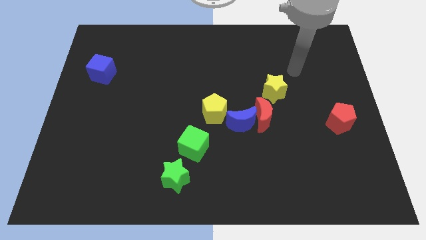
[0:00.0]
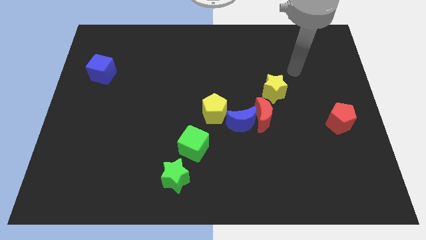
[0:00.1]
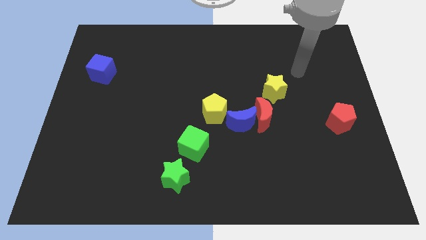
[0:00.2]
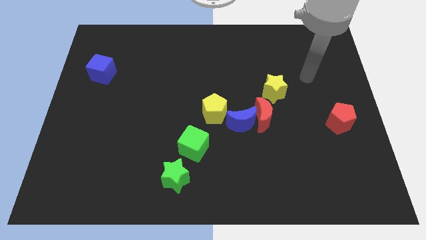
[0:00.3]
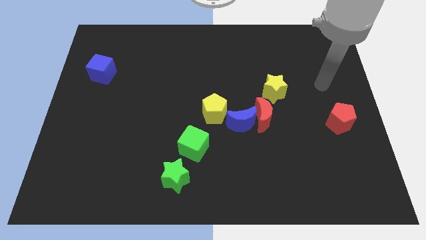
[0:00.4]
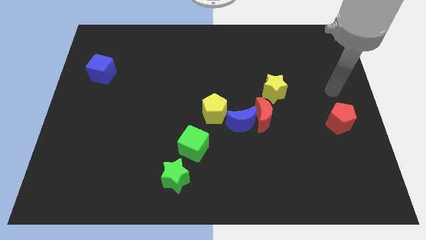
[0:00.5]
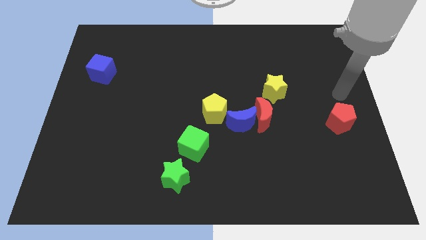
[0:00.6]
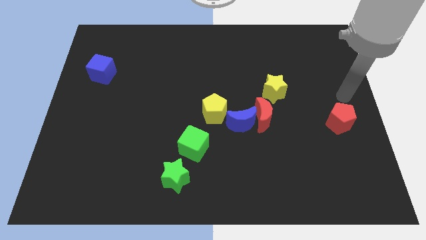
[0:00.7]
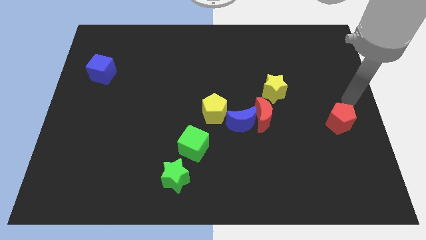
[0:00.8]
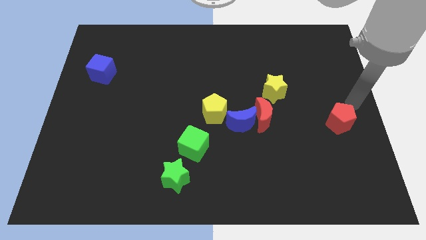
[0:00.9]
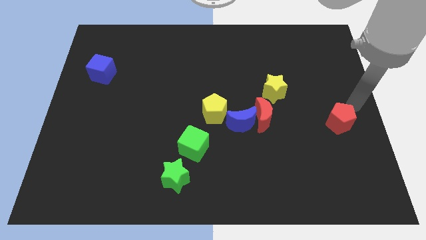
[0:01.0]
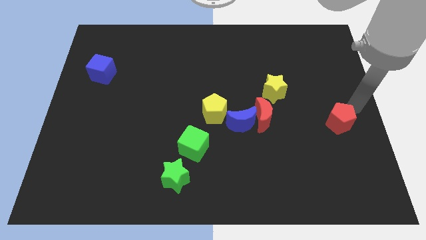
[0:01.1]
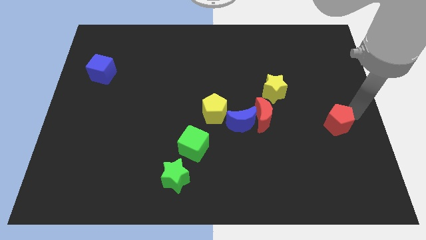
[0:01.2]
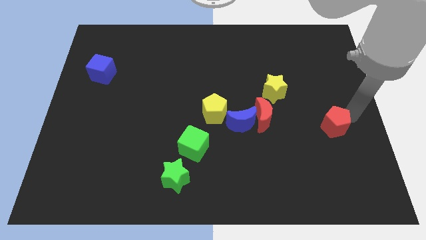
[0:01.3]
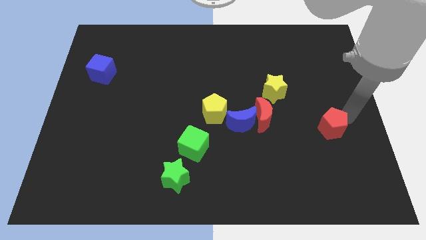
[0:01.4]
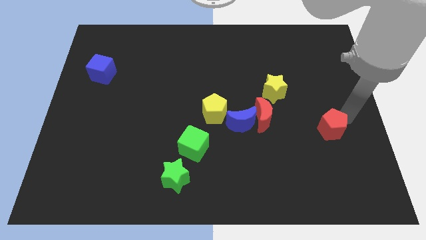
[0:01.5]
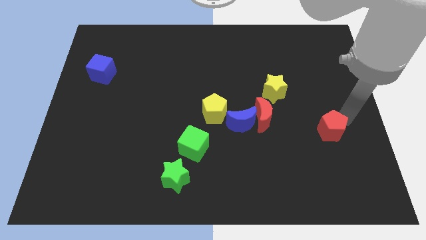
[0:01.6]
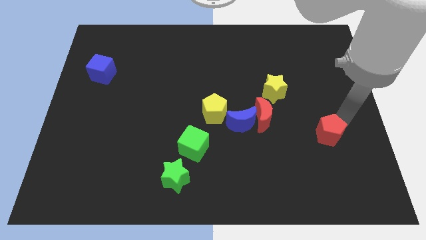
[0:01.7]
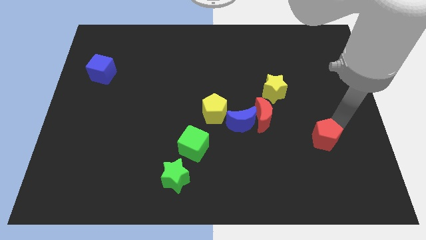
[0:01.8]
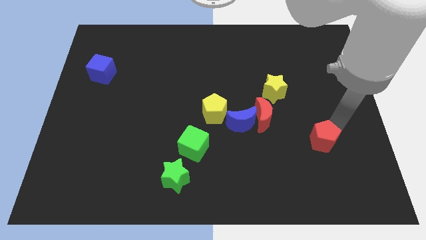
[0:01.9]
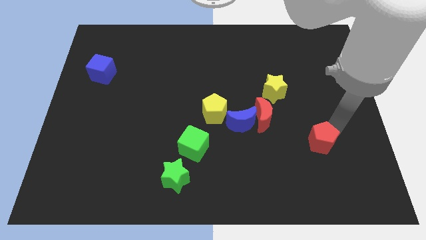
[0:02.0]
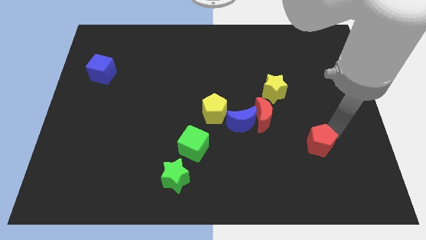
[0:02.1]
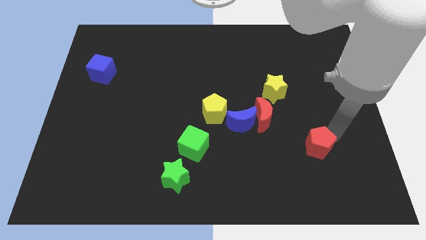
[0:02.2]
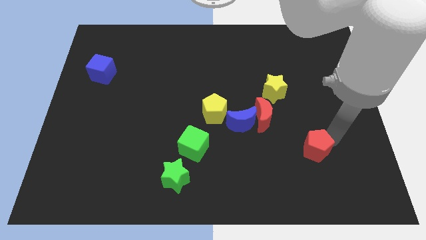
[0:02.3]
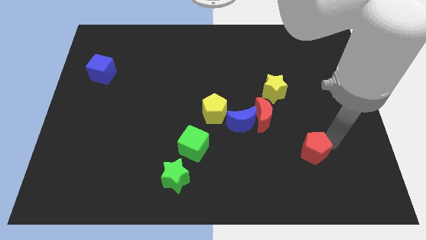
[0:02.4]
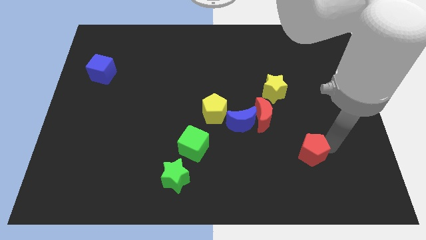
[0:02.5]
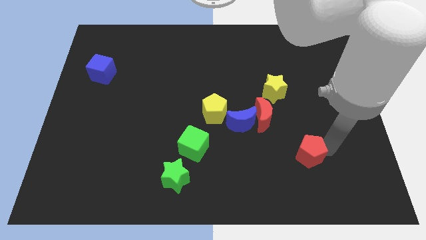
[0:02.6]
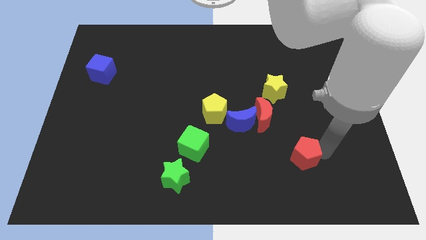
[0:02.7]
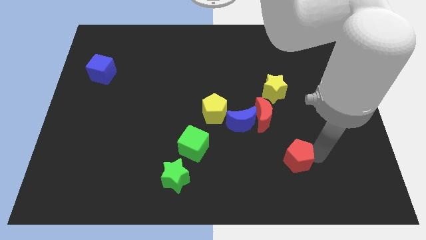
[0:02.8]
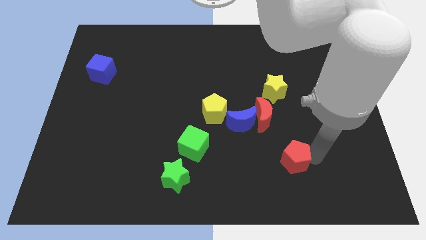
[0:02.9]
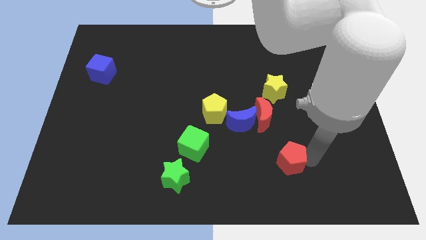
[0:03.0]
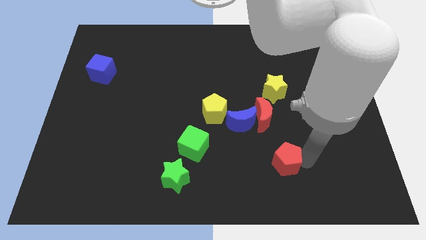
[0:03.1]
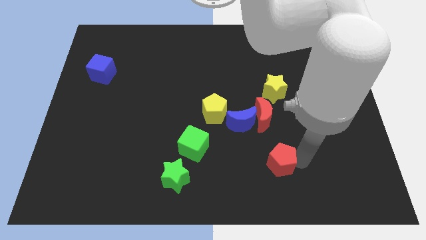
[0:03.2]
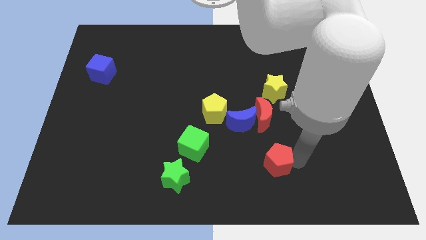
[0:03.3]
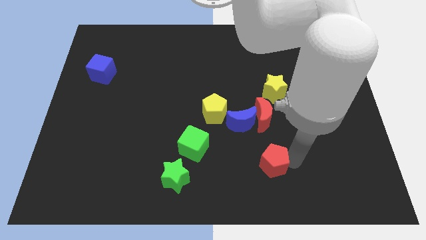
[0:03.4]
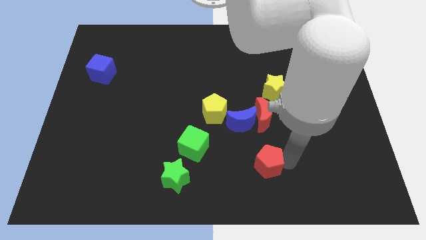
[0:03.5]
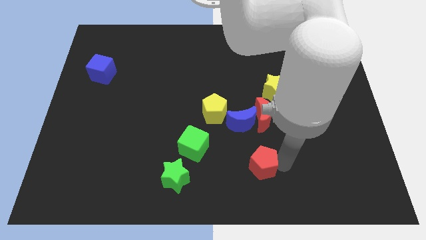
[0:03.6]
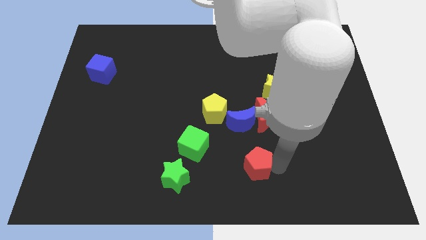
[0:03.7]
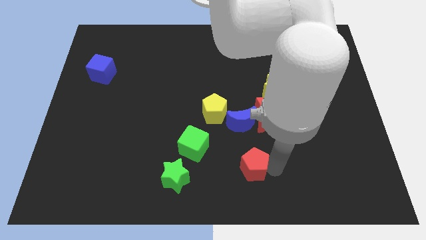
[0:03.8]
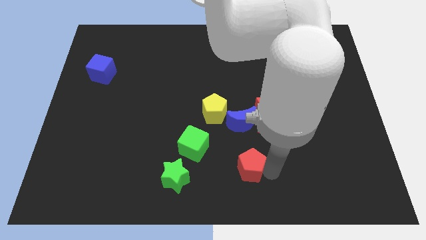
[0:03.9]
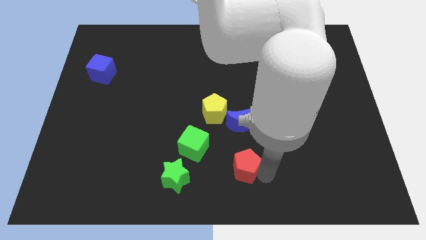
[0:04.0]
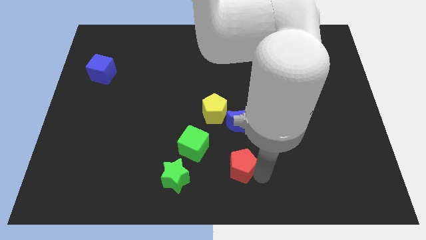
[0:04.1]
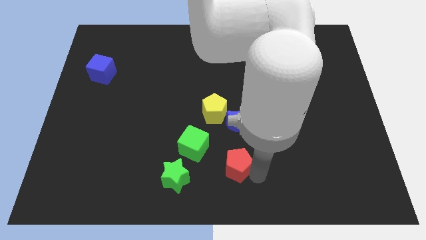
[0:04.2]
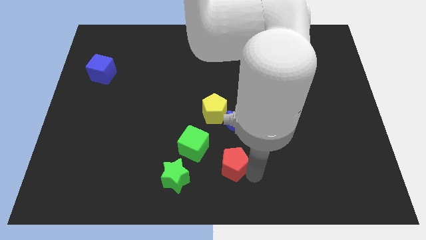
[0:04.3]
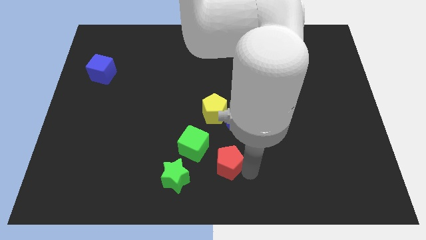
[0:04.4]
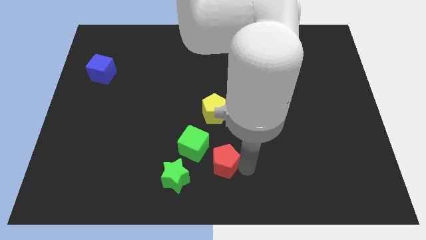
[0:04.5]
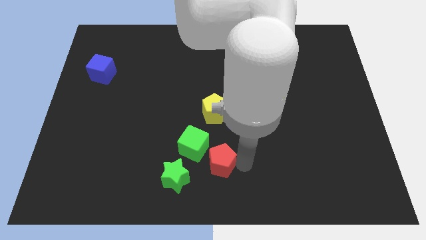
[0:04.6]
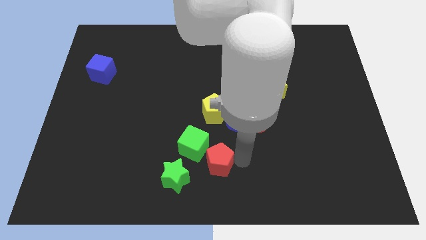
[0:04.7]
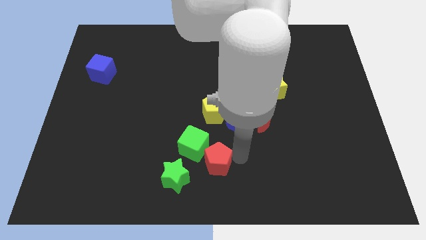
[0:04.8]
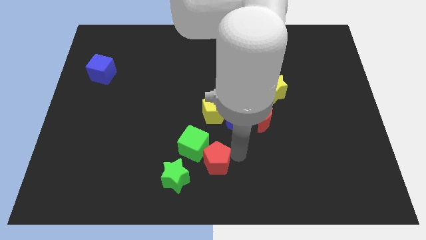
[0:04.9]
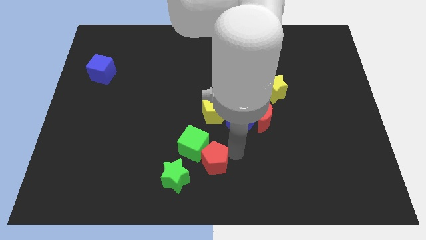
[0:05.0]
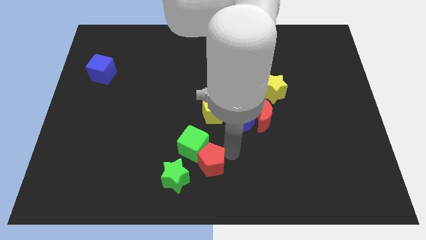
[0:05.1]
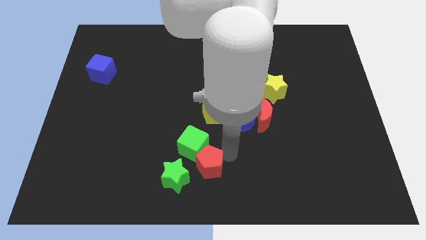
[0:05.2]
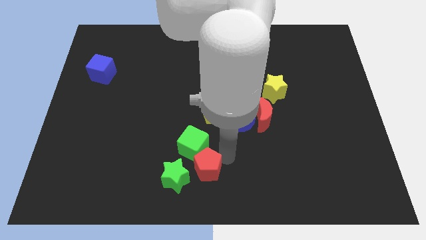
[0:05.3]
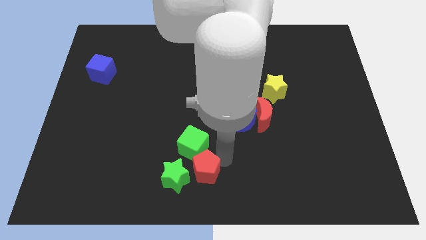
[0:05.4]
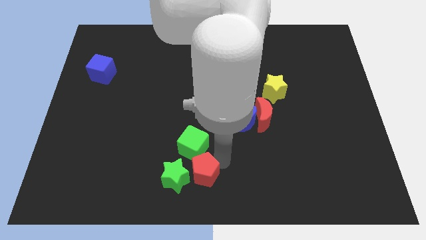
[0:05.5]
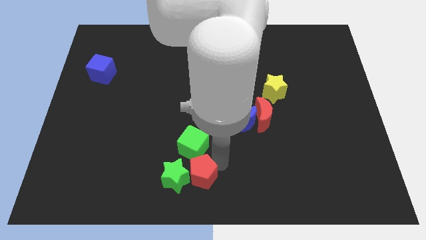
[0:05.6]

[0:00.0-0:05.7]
slide the red pentagon close to the green star

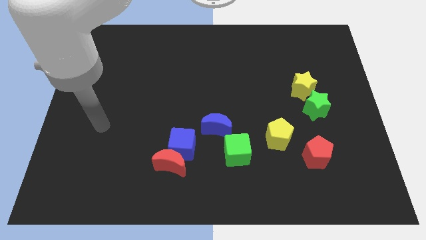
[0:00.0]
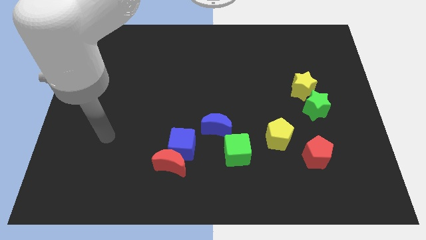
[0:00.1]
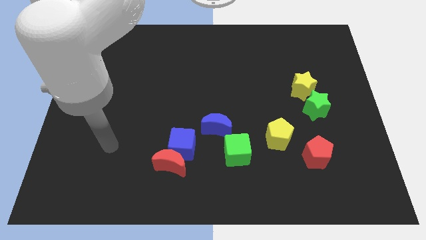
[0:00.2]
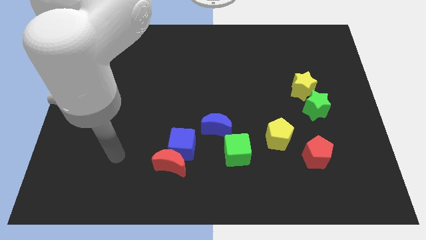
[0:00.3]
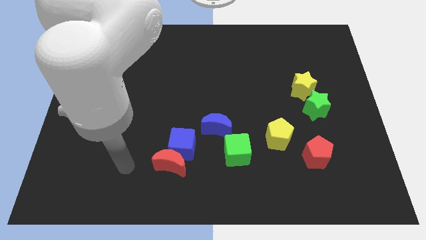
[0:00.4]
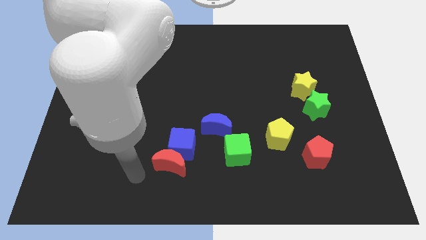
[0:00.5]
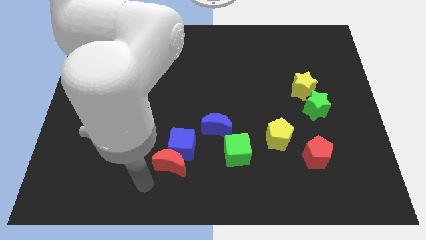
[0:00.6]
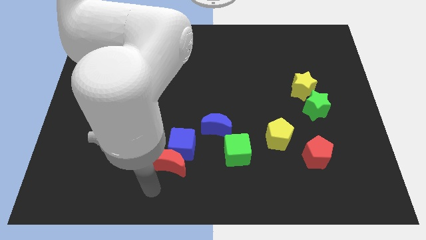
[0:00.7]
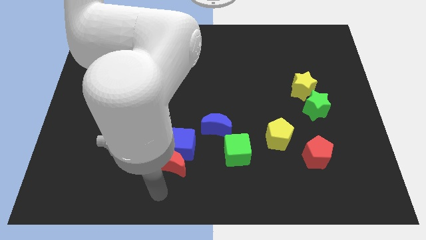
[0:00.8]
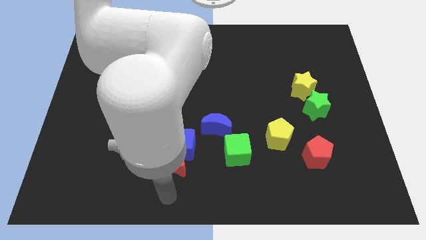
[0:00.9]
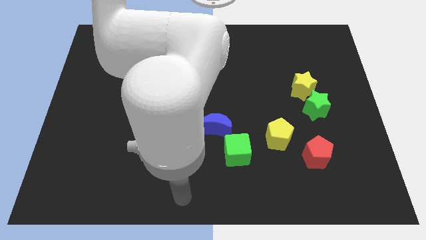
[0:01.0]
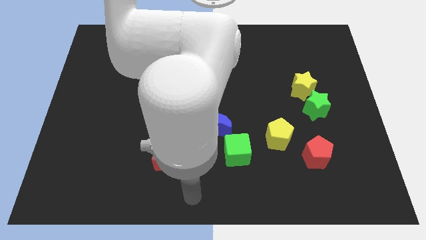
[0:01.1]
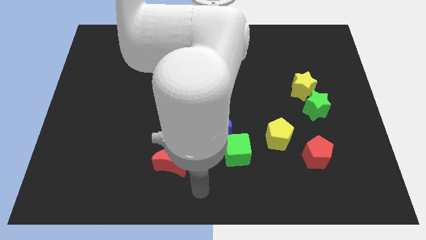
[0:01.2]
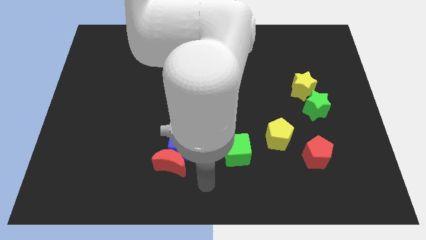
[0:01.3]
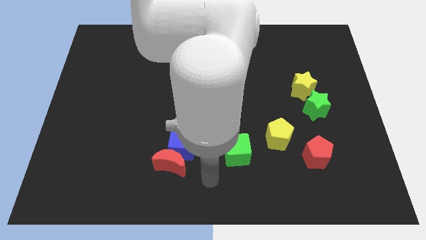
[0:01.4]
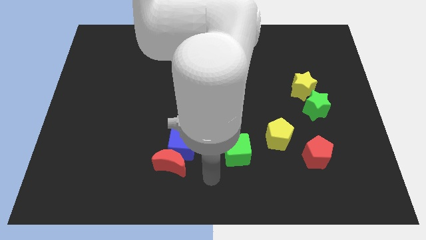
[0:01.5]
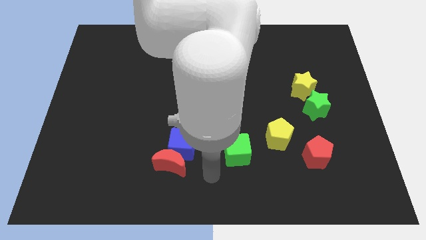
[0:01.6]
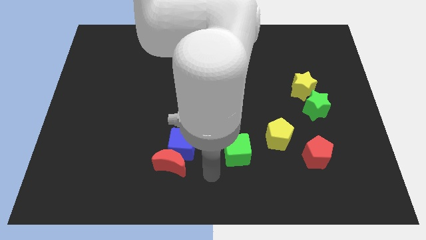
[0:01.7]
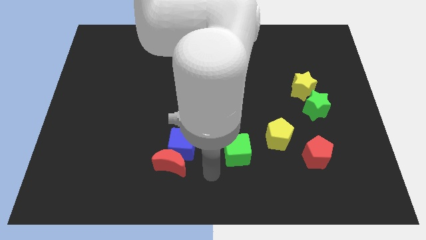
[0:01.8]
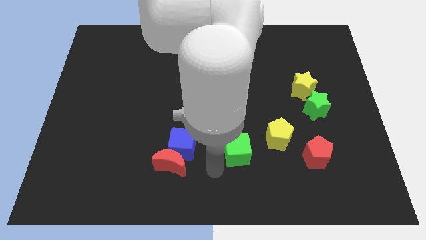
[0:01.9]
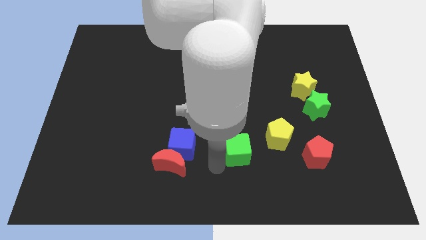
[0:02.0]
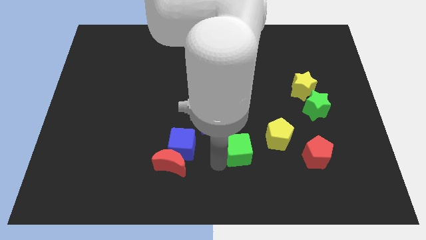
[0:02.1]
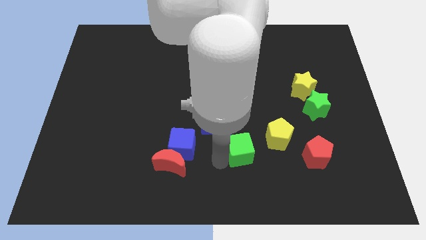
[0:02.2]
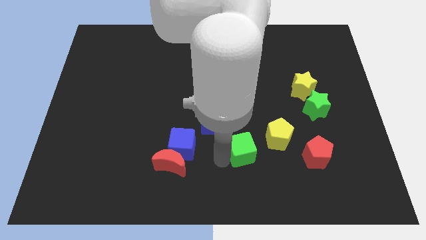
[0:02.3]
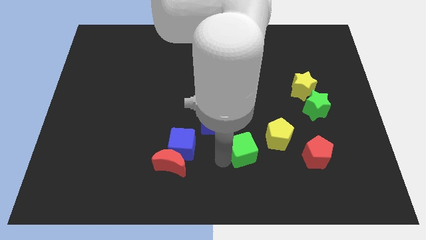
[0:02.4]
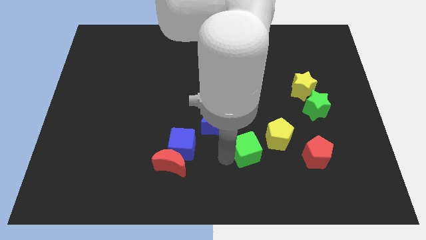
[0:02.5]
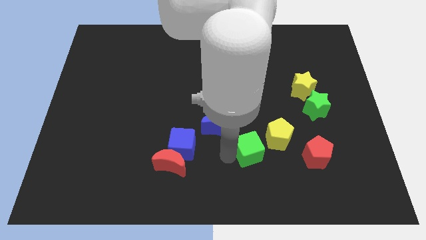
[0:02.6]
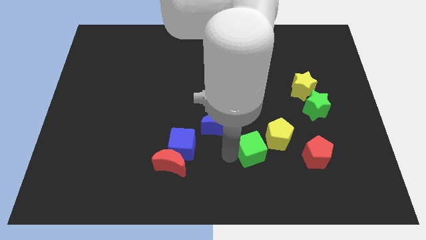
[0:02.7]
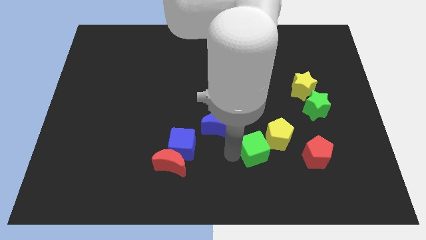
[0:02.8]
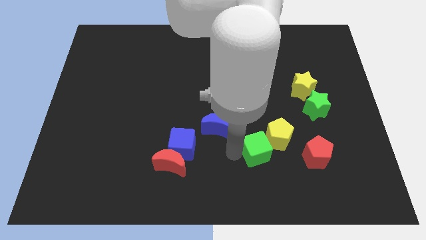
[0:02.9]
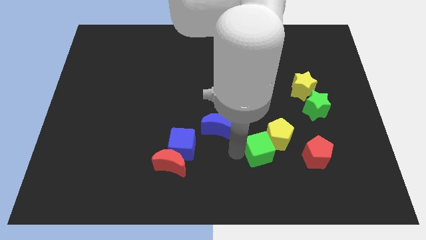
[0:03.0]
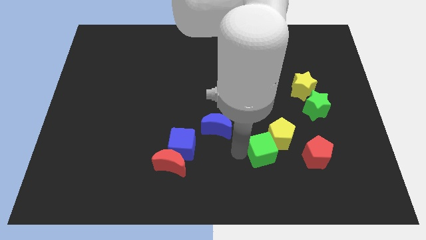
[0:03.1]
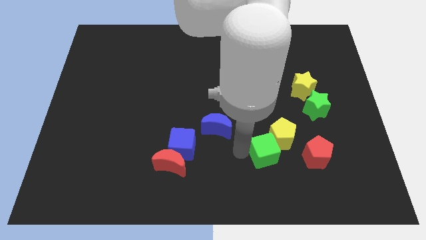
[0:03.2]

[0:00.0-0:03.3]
push the green cube close to the yellow pentagon
